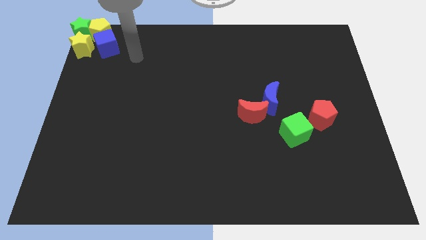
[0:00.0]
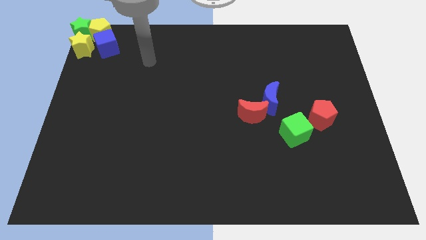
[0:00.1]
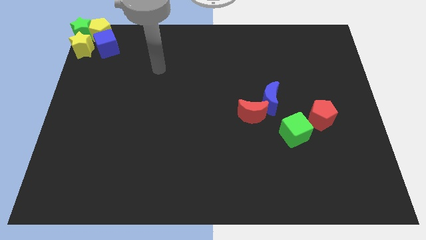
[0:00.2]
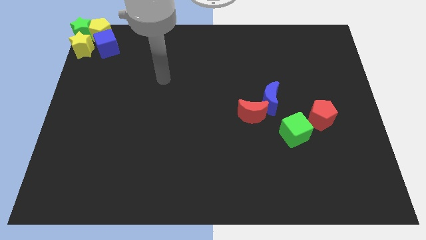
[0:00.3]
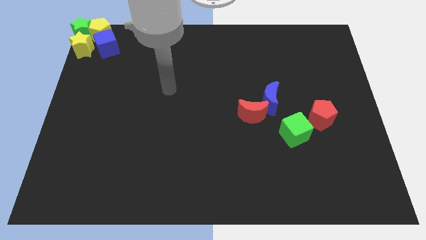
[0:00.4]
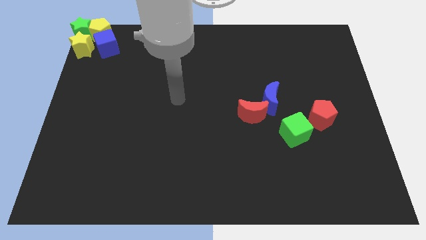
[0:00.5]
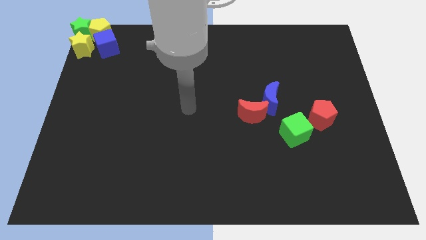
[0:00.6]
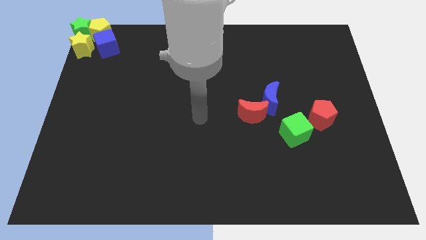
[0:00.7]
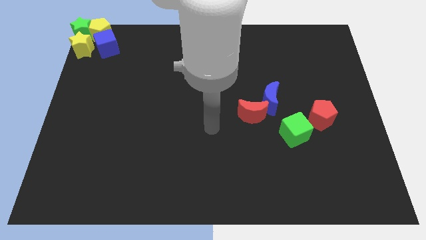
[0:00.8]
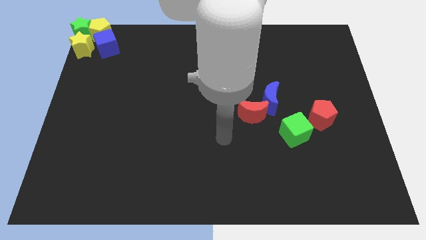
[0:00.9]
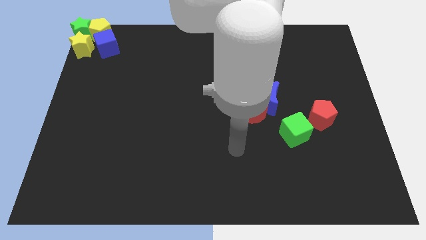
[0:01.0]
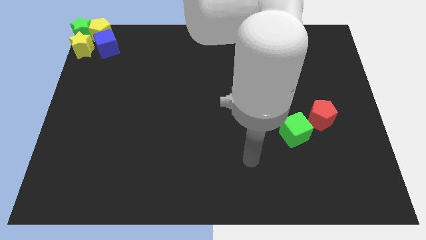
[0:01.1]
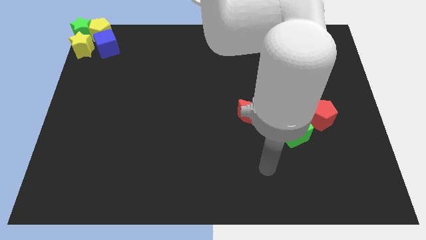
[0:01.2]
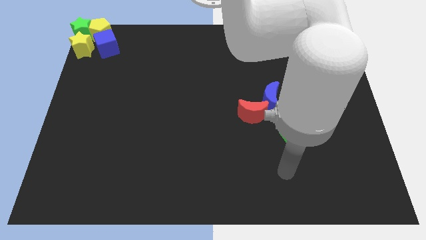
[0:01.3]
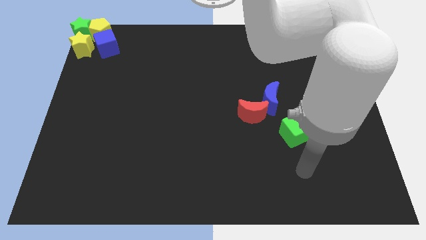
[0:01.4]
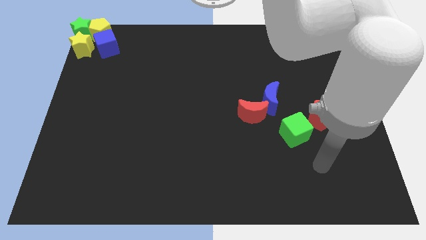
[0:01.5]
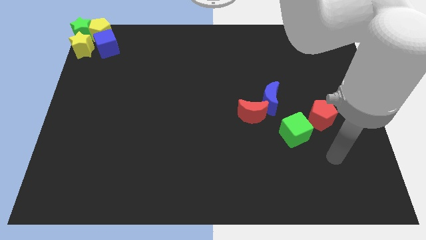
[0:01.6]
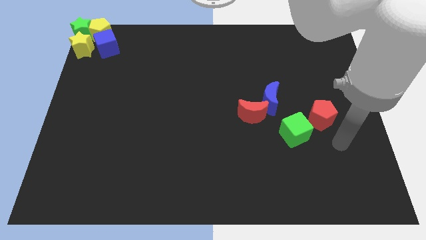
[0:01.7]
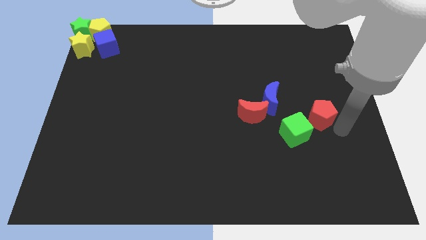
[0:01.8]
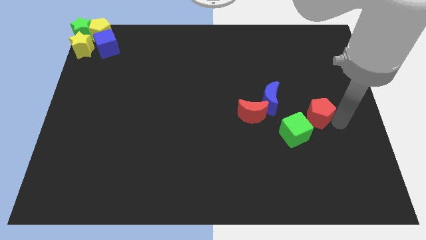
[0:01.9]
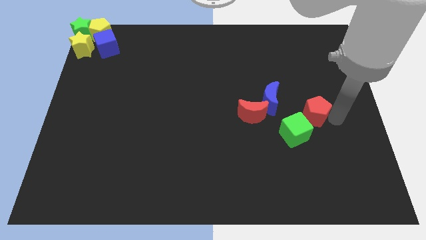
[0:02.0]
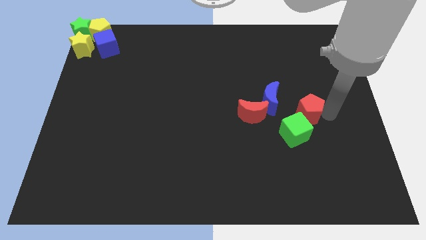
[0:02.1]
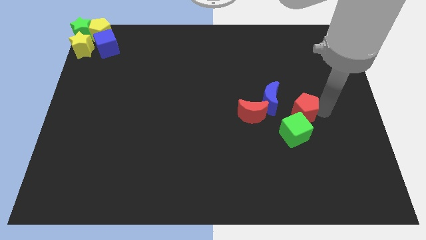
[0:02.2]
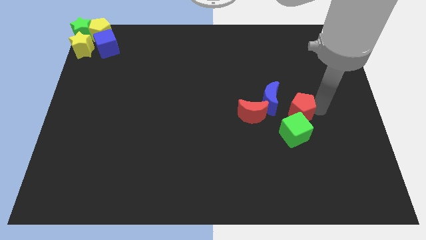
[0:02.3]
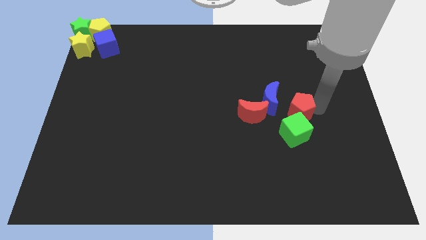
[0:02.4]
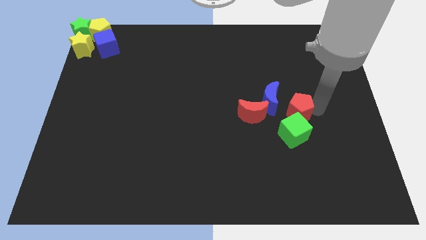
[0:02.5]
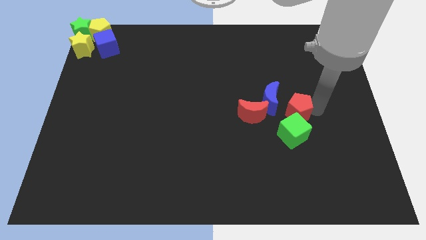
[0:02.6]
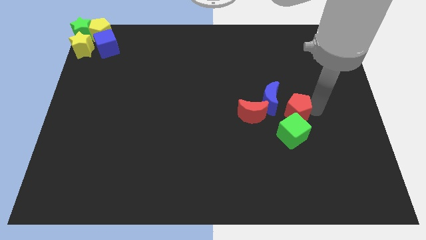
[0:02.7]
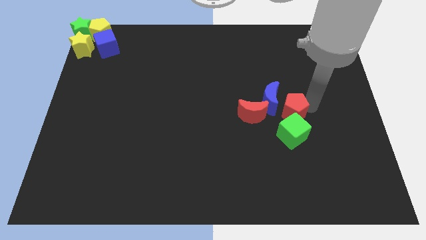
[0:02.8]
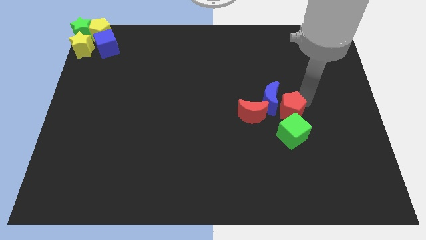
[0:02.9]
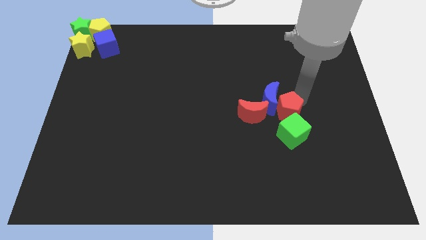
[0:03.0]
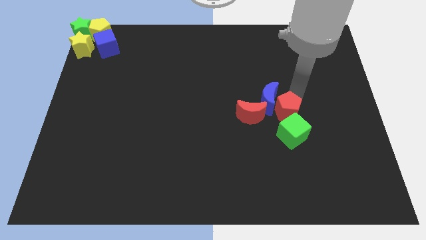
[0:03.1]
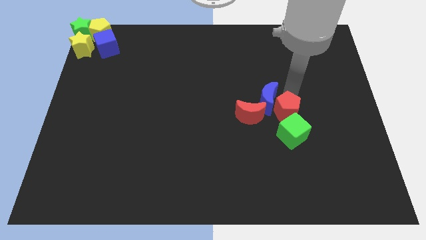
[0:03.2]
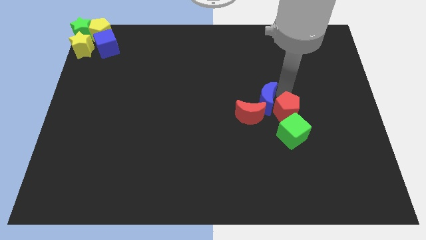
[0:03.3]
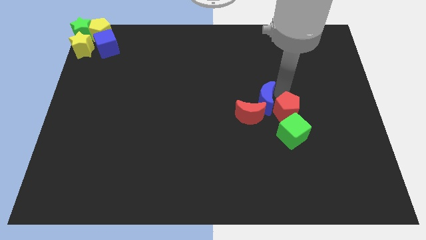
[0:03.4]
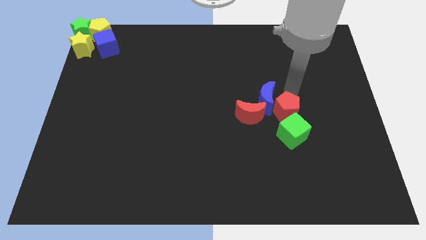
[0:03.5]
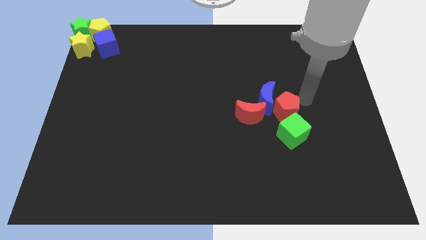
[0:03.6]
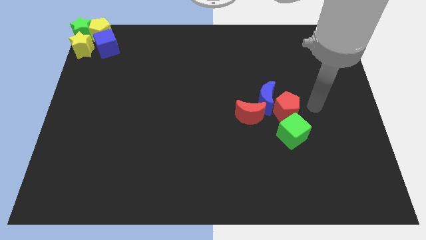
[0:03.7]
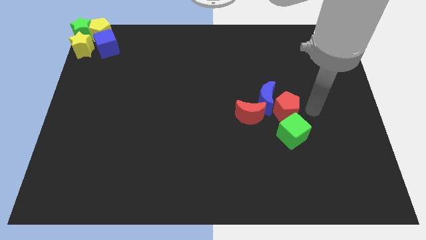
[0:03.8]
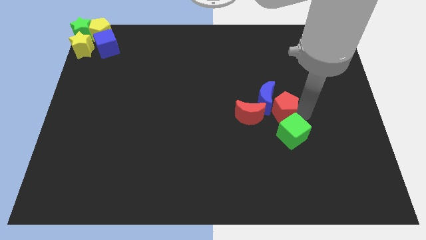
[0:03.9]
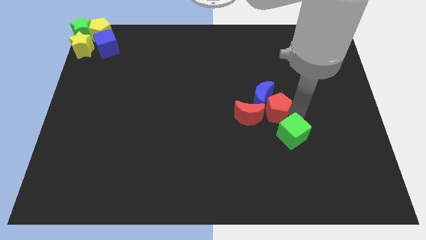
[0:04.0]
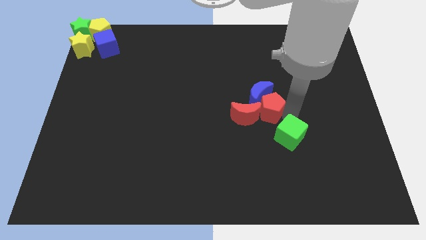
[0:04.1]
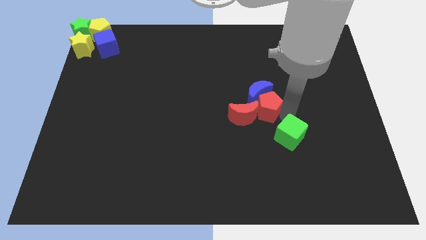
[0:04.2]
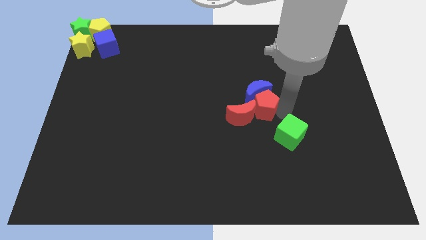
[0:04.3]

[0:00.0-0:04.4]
drag the red pentagon into the group of blocks

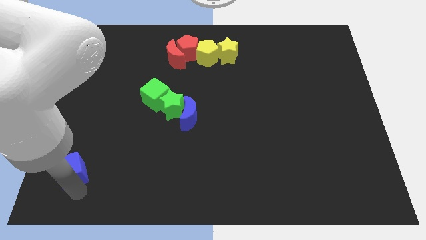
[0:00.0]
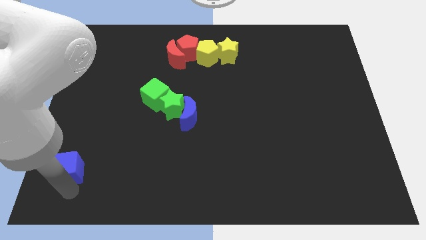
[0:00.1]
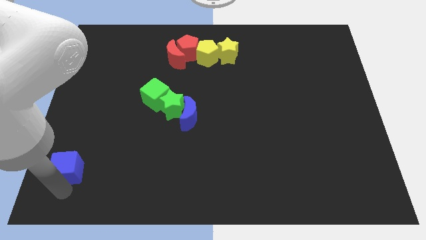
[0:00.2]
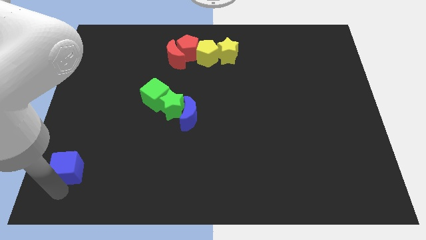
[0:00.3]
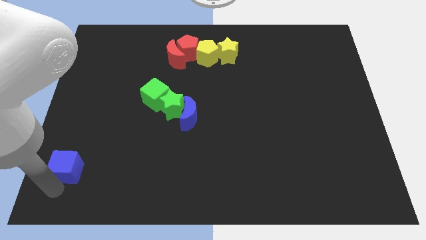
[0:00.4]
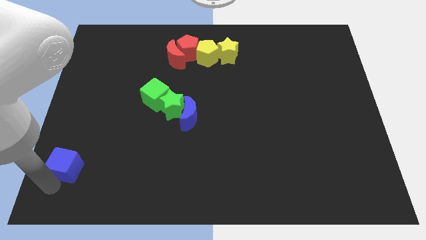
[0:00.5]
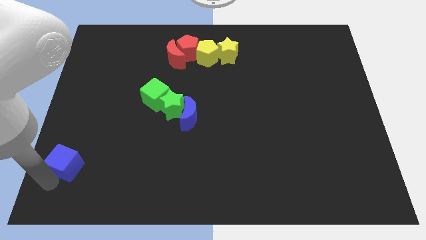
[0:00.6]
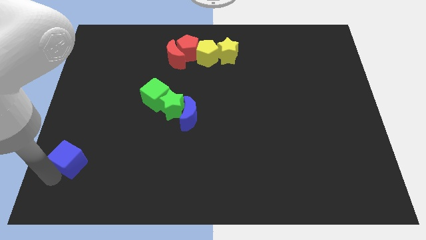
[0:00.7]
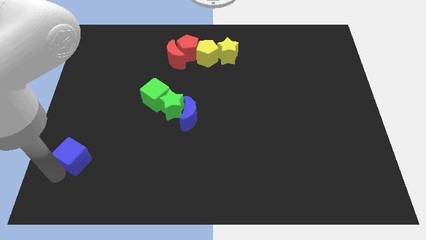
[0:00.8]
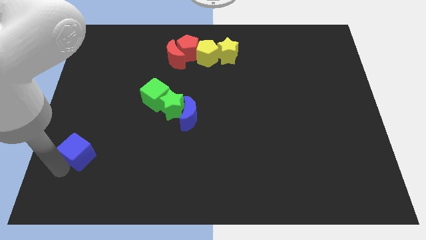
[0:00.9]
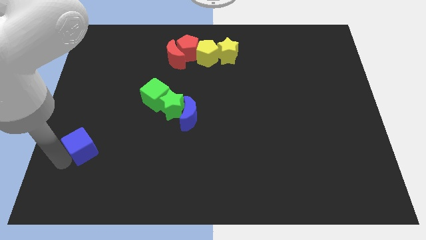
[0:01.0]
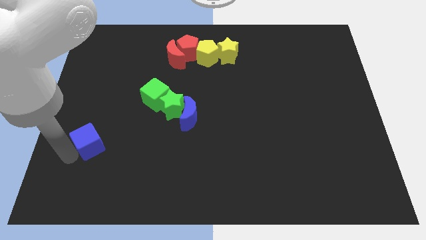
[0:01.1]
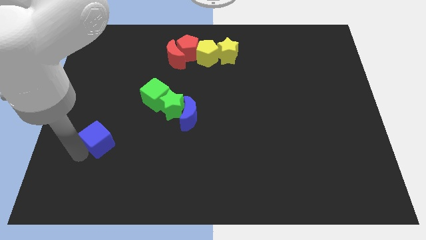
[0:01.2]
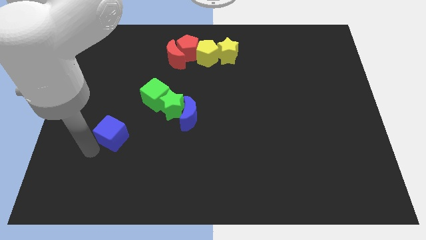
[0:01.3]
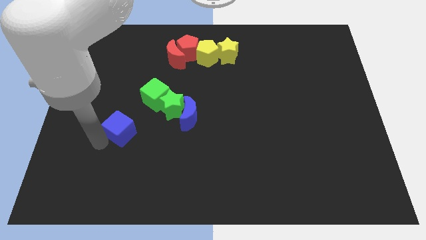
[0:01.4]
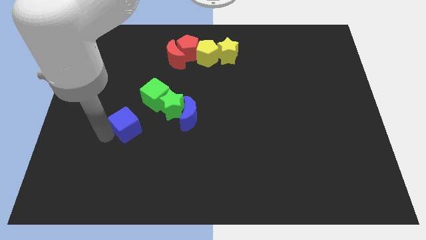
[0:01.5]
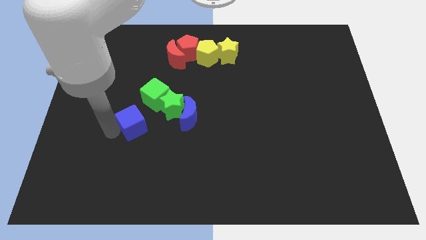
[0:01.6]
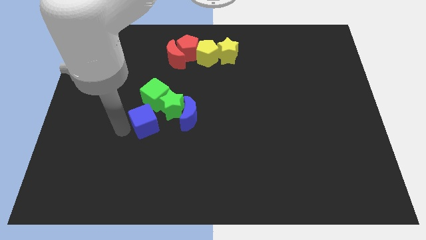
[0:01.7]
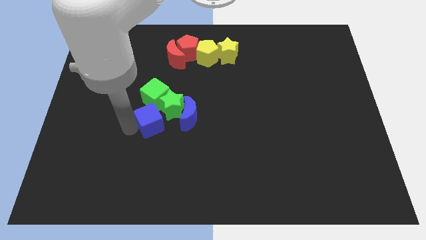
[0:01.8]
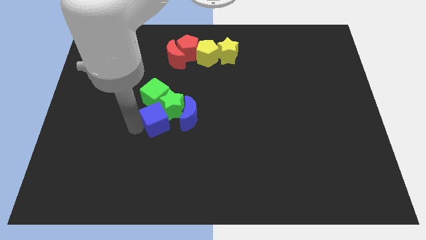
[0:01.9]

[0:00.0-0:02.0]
push blue cube into green blocks

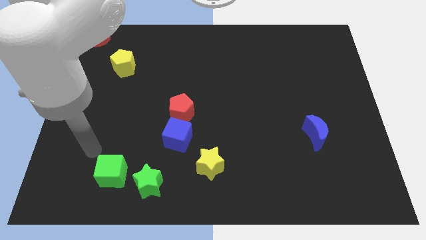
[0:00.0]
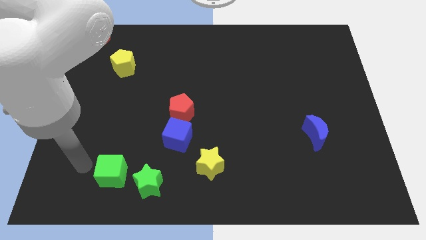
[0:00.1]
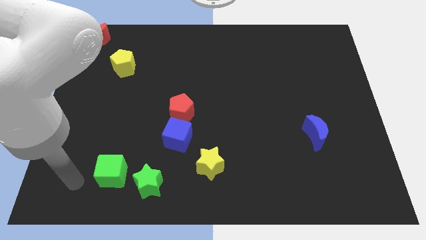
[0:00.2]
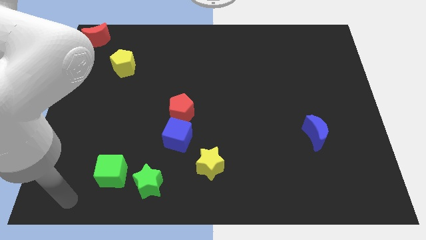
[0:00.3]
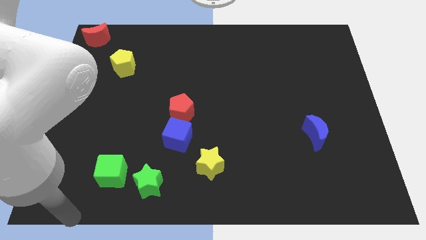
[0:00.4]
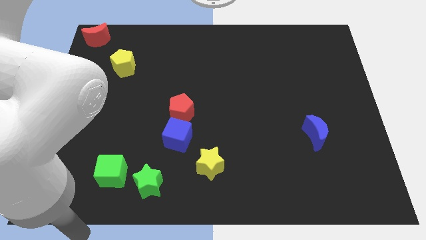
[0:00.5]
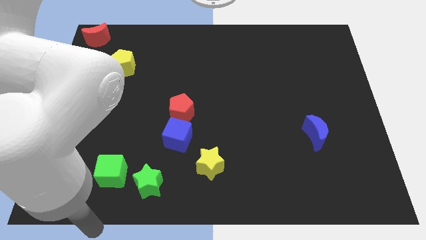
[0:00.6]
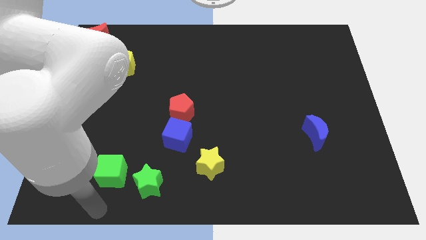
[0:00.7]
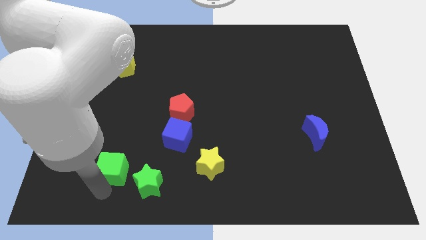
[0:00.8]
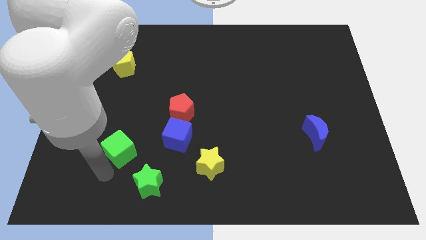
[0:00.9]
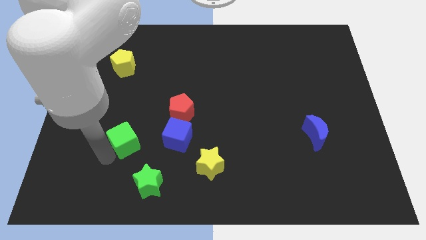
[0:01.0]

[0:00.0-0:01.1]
place green cube to the left of blue cube

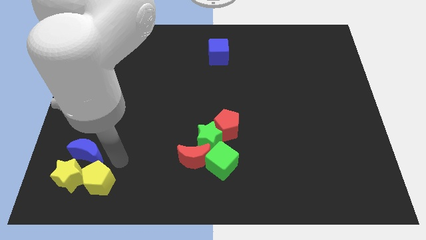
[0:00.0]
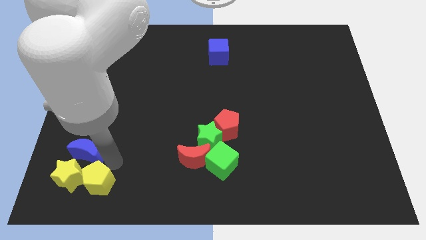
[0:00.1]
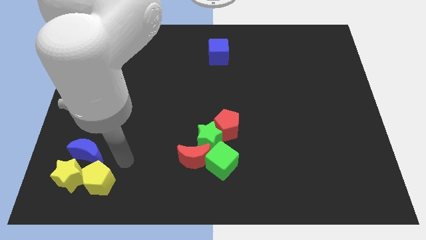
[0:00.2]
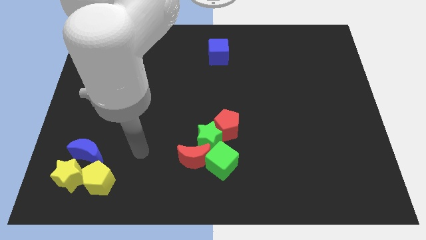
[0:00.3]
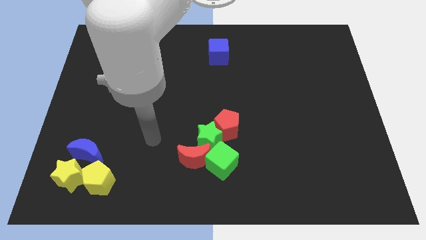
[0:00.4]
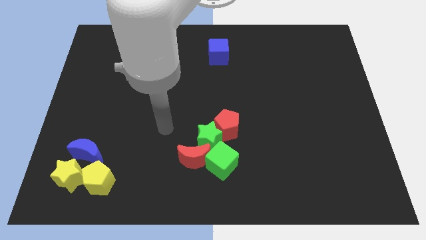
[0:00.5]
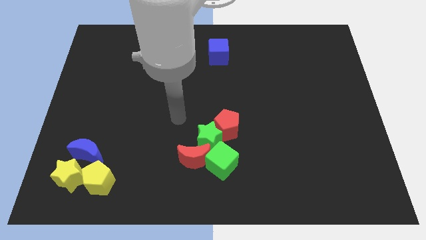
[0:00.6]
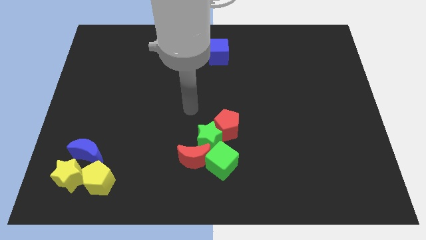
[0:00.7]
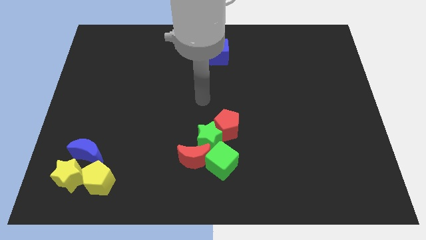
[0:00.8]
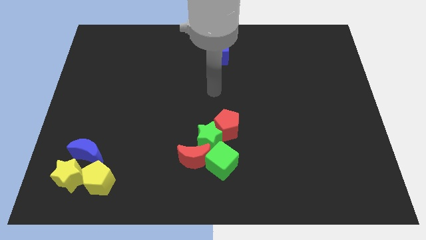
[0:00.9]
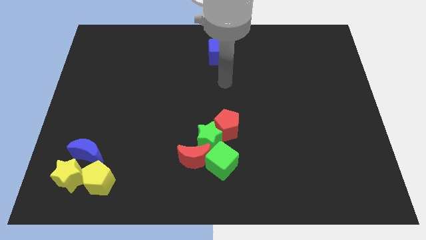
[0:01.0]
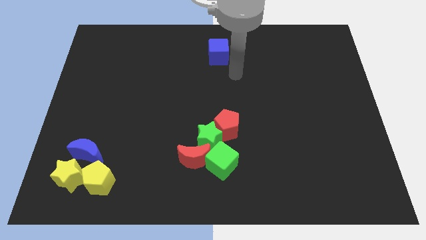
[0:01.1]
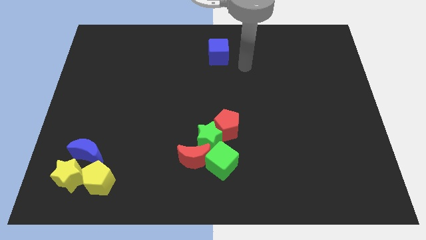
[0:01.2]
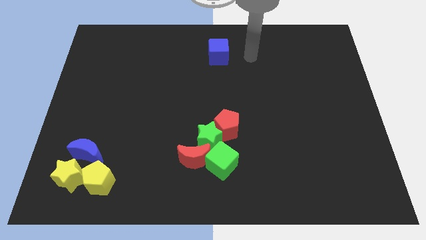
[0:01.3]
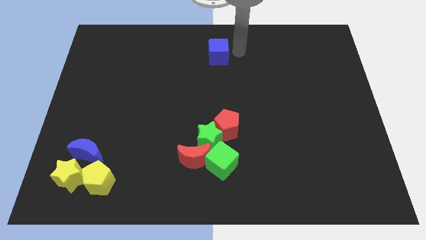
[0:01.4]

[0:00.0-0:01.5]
move your arm to the right of the blue cube
